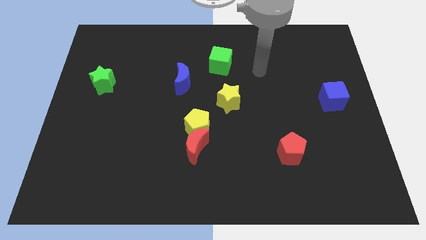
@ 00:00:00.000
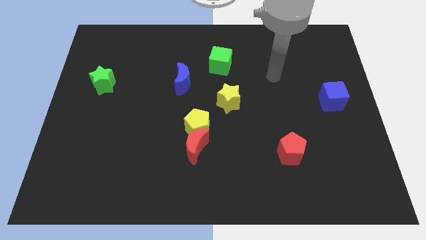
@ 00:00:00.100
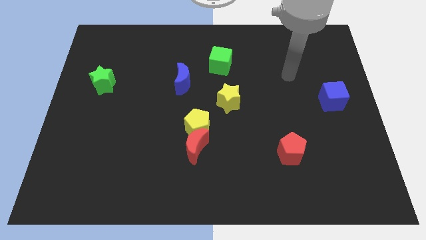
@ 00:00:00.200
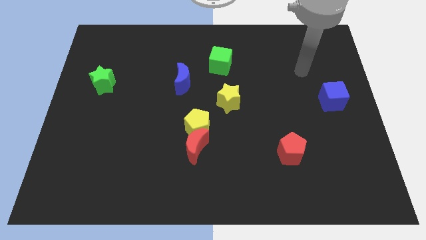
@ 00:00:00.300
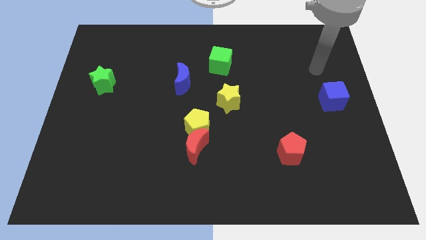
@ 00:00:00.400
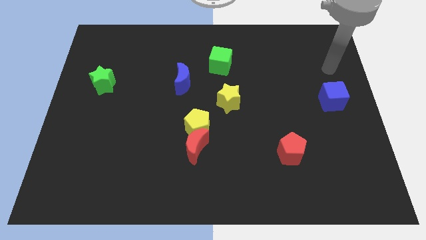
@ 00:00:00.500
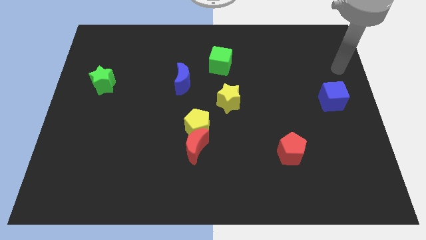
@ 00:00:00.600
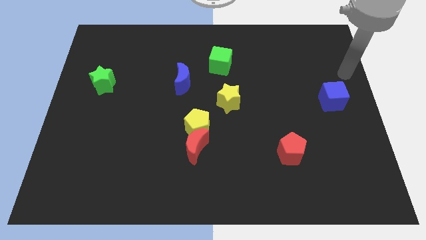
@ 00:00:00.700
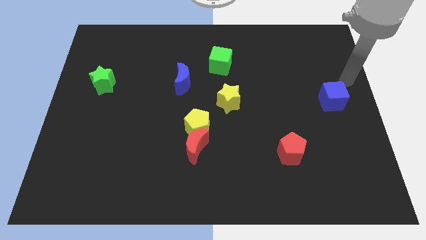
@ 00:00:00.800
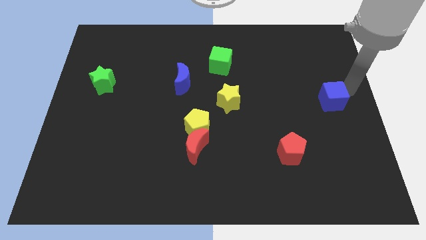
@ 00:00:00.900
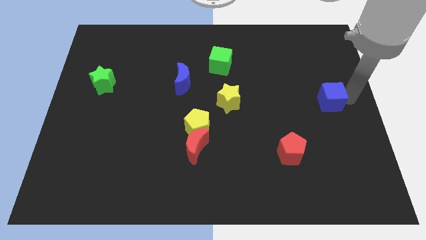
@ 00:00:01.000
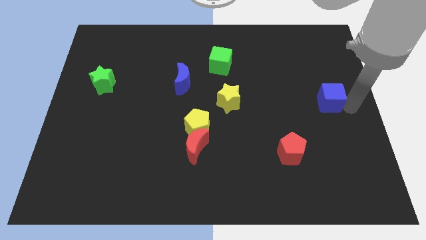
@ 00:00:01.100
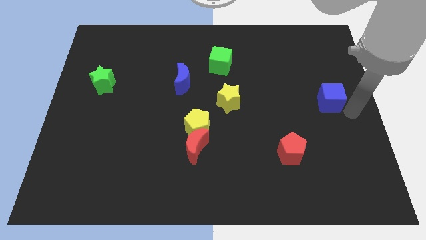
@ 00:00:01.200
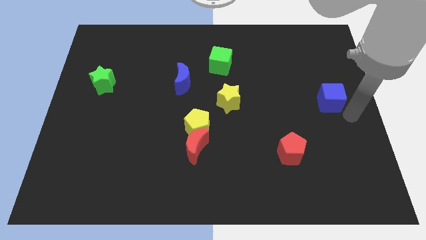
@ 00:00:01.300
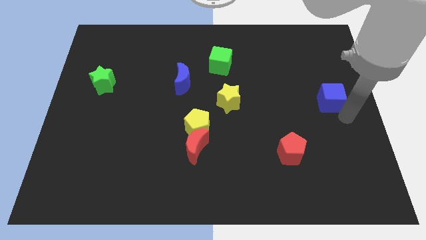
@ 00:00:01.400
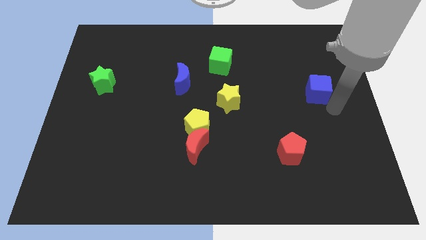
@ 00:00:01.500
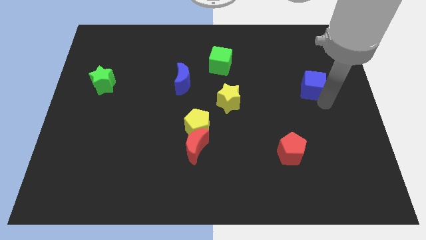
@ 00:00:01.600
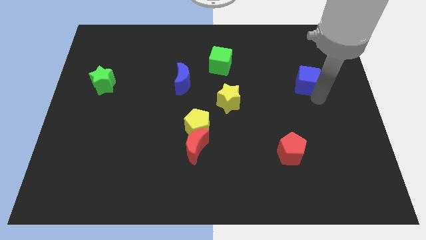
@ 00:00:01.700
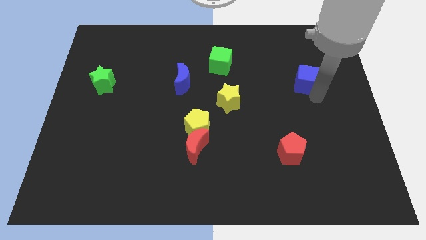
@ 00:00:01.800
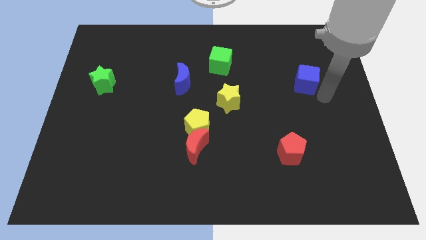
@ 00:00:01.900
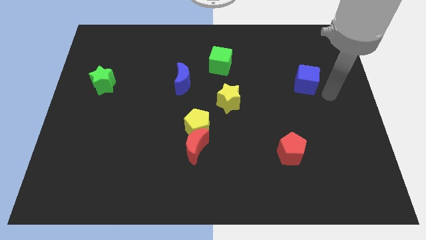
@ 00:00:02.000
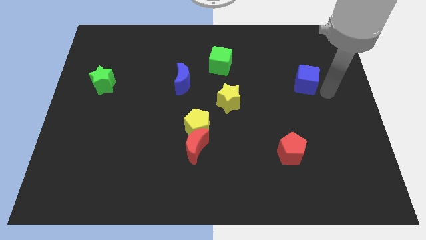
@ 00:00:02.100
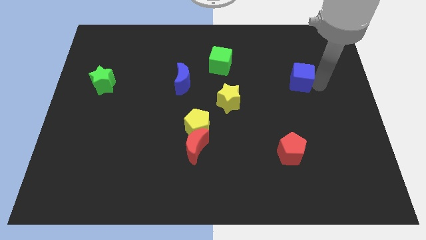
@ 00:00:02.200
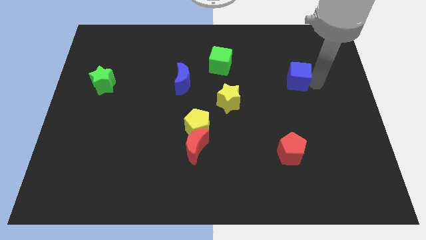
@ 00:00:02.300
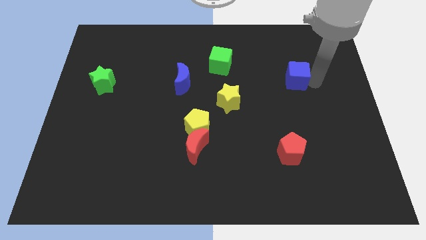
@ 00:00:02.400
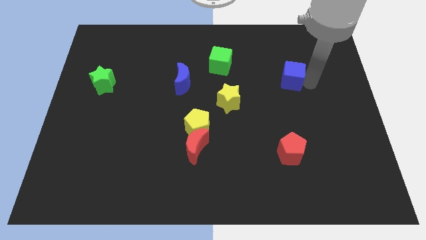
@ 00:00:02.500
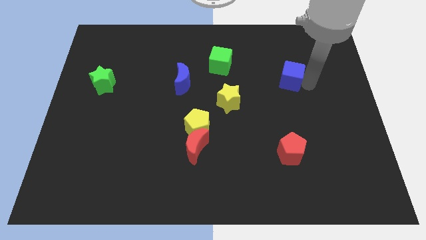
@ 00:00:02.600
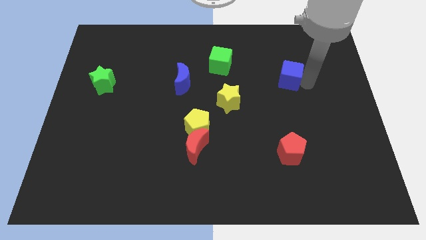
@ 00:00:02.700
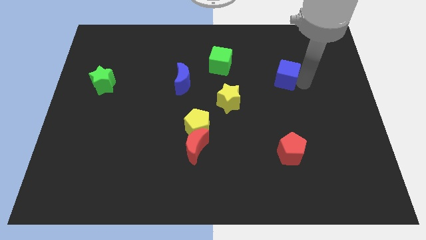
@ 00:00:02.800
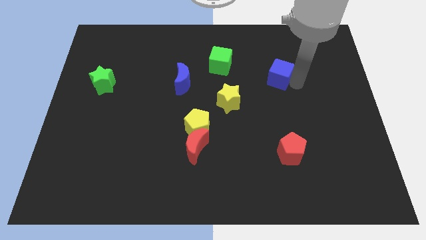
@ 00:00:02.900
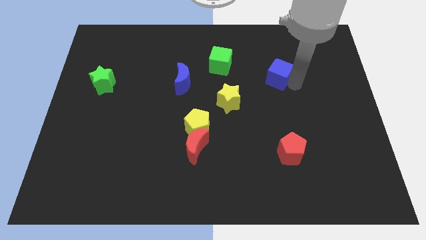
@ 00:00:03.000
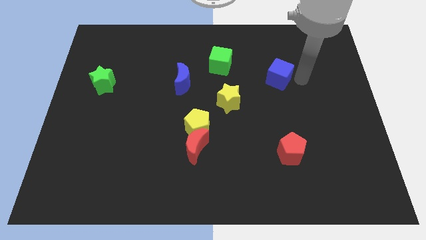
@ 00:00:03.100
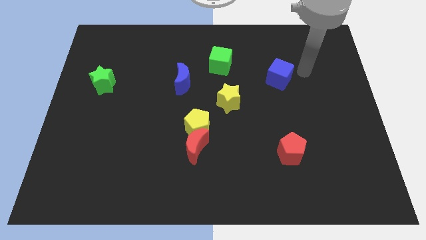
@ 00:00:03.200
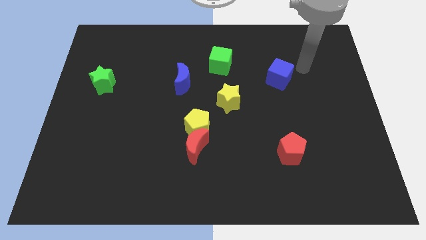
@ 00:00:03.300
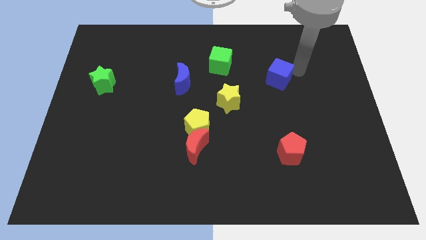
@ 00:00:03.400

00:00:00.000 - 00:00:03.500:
place the blue cube at the top of the red pentagon

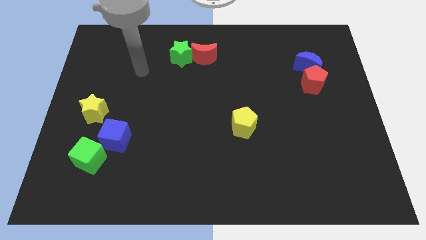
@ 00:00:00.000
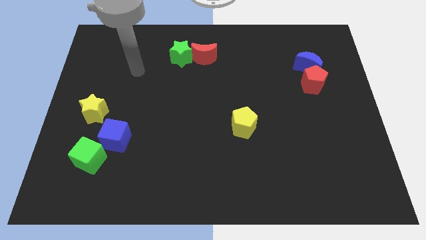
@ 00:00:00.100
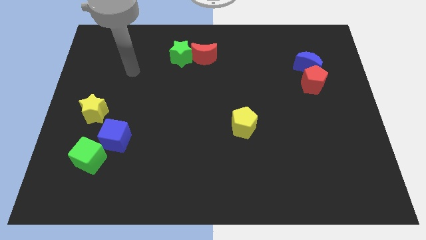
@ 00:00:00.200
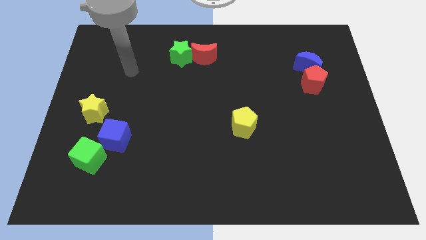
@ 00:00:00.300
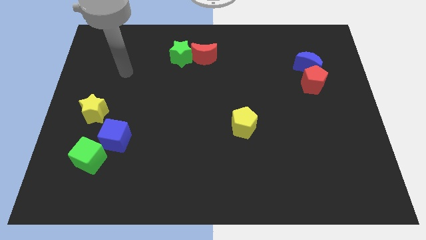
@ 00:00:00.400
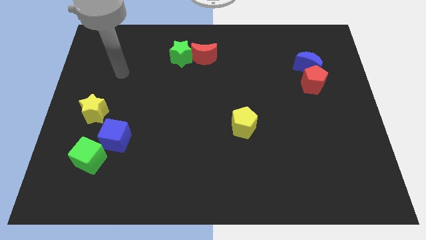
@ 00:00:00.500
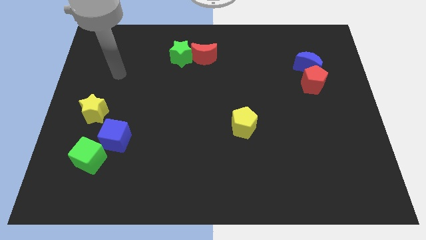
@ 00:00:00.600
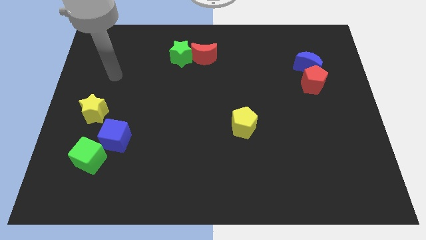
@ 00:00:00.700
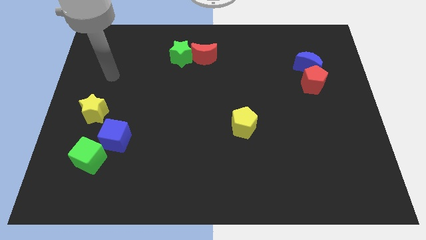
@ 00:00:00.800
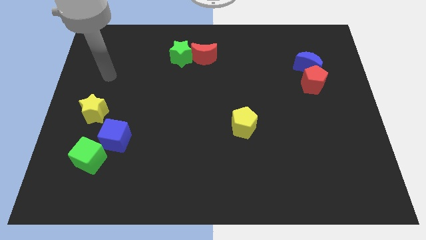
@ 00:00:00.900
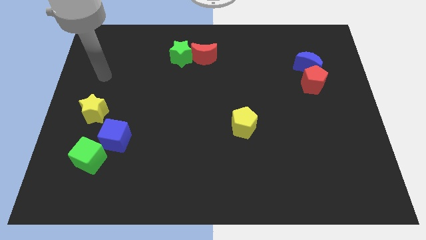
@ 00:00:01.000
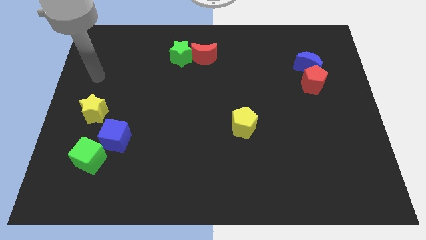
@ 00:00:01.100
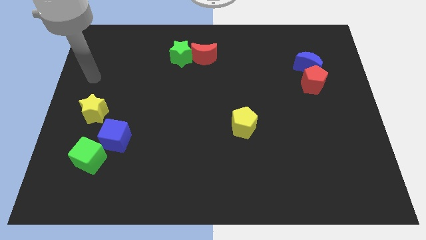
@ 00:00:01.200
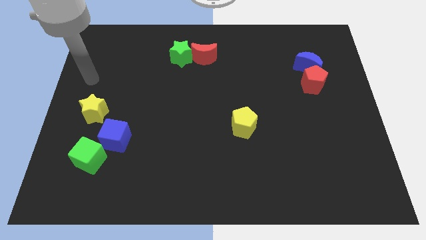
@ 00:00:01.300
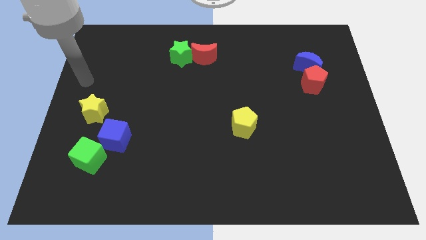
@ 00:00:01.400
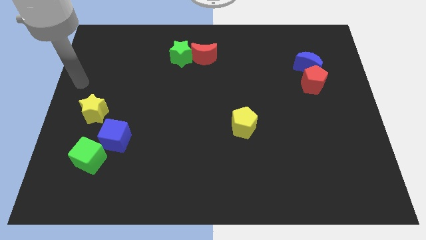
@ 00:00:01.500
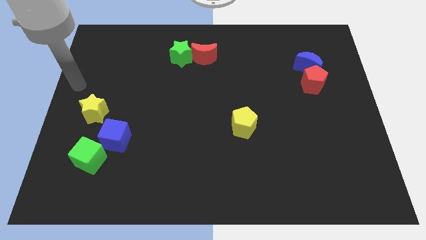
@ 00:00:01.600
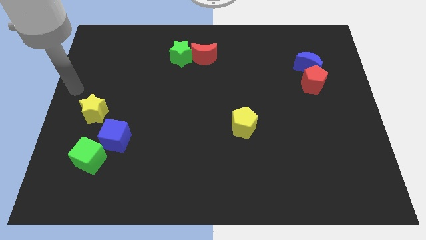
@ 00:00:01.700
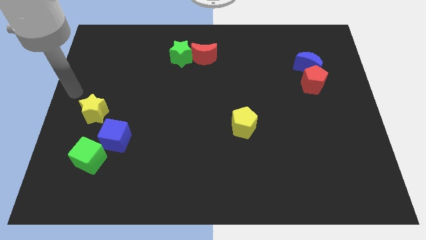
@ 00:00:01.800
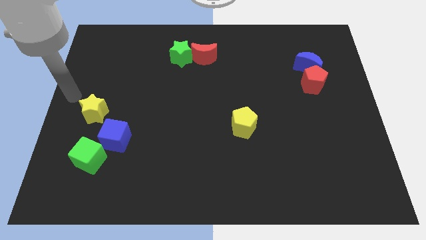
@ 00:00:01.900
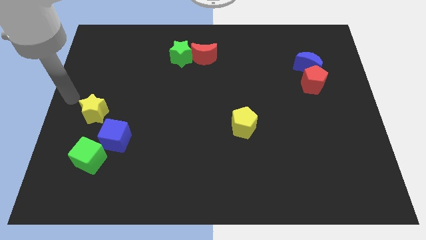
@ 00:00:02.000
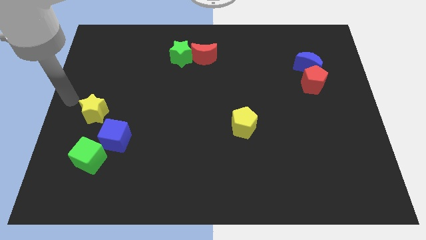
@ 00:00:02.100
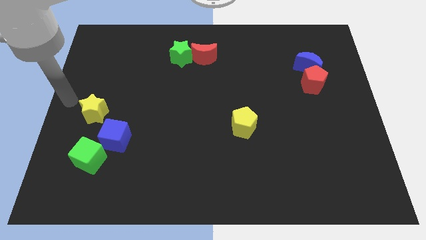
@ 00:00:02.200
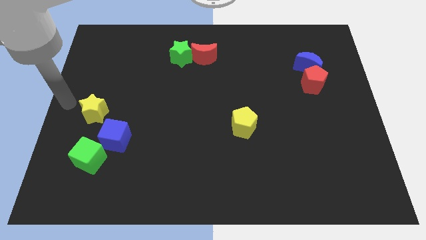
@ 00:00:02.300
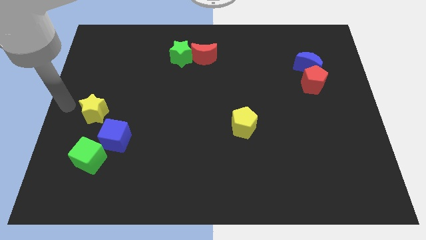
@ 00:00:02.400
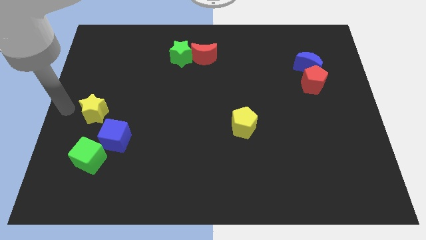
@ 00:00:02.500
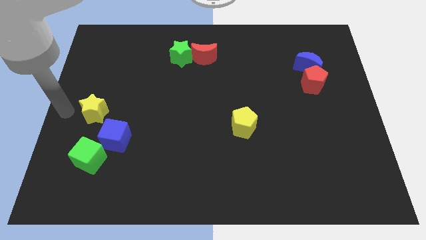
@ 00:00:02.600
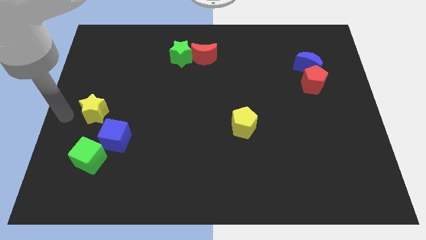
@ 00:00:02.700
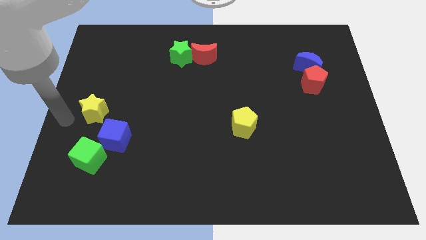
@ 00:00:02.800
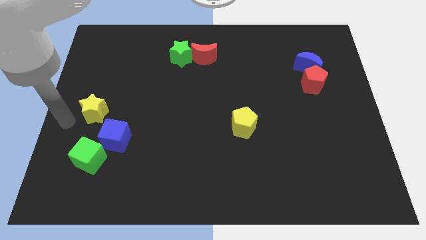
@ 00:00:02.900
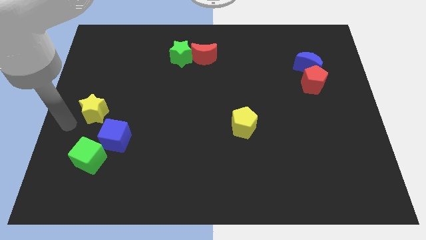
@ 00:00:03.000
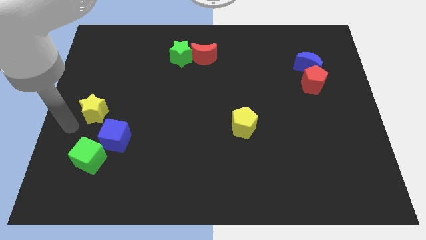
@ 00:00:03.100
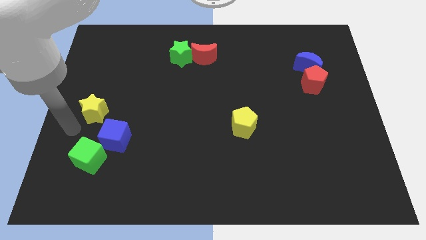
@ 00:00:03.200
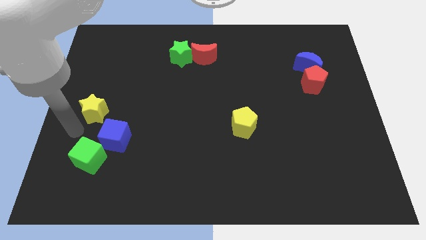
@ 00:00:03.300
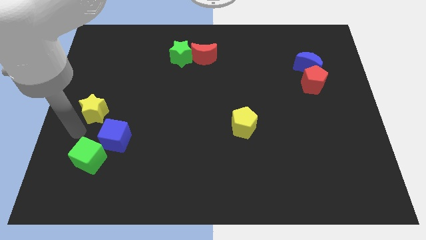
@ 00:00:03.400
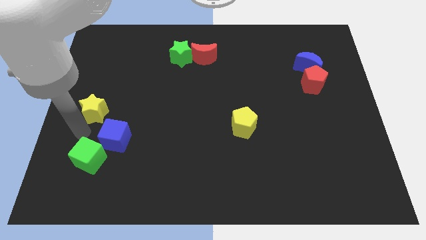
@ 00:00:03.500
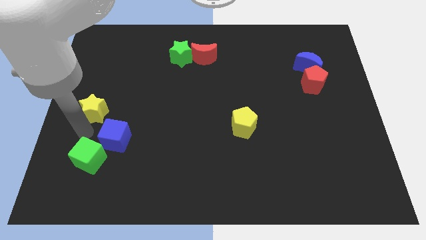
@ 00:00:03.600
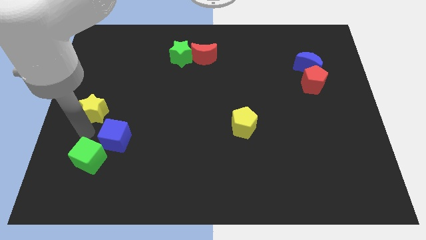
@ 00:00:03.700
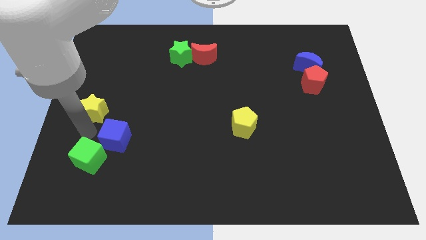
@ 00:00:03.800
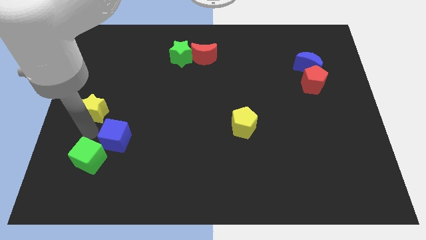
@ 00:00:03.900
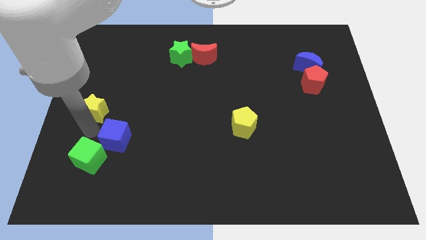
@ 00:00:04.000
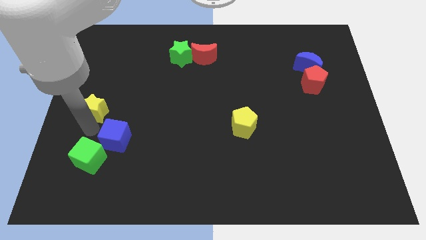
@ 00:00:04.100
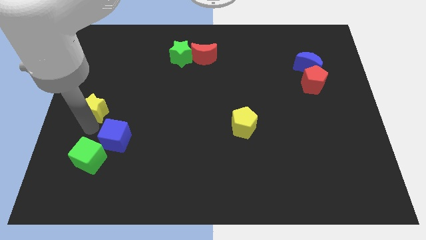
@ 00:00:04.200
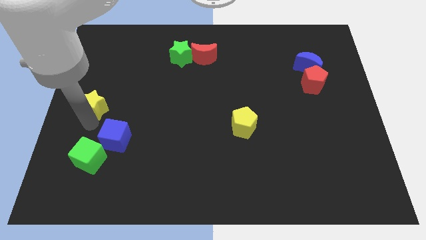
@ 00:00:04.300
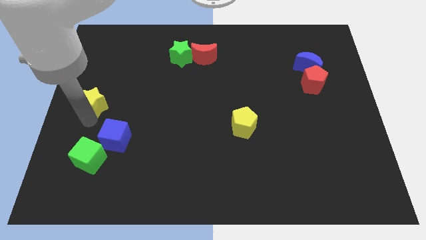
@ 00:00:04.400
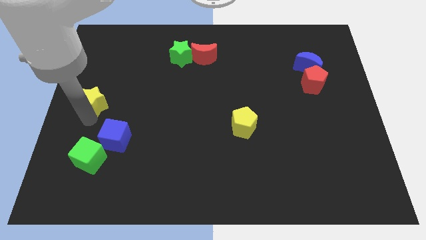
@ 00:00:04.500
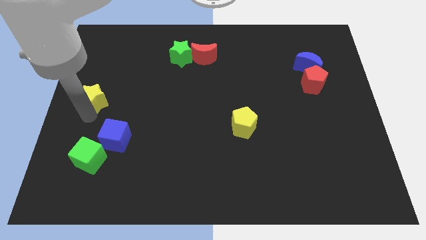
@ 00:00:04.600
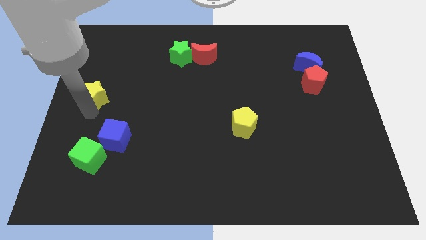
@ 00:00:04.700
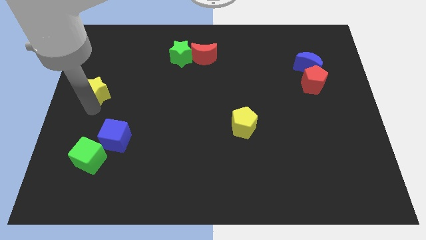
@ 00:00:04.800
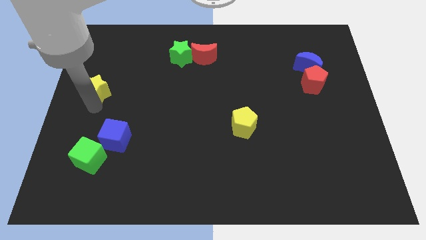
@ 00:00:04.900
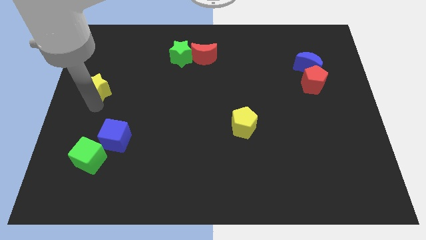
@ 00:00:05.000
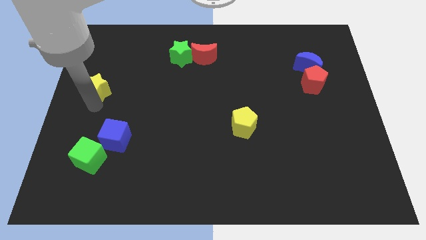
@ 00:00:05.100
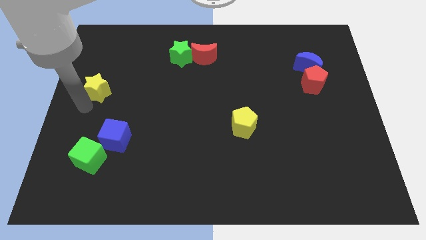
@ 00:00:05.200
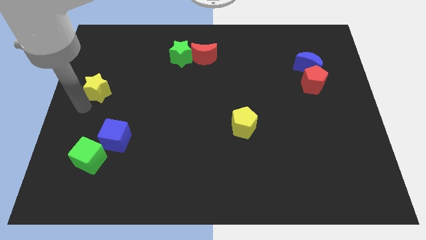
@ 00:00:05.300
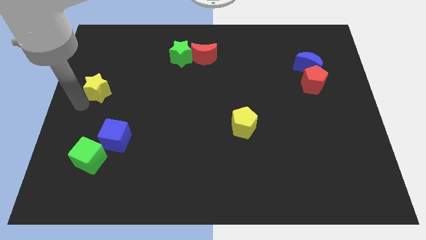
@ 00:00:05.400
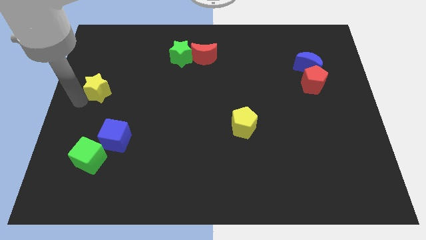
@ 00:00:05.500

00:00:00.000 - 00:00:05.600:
move the yellow star diagonally to the left of blue cube
